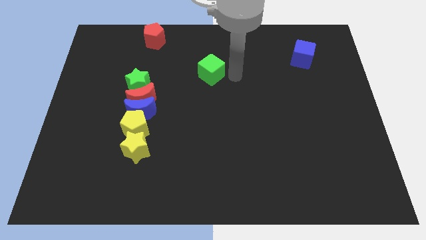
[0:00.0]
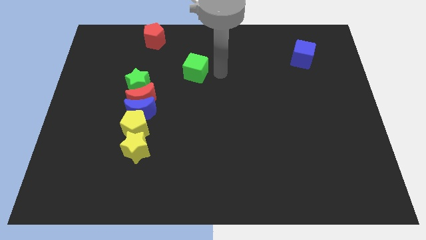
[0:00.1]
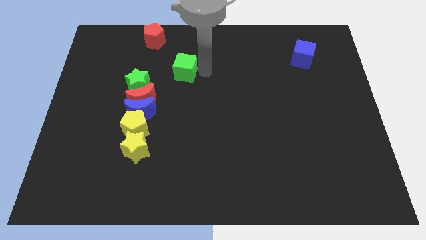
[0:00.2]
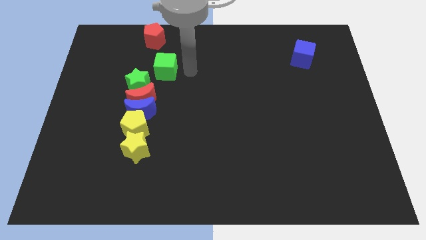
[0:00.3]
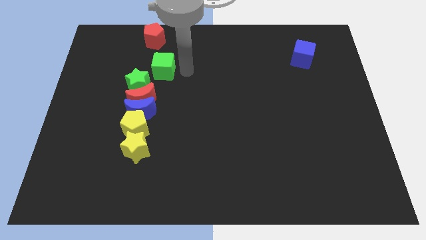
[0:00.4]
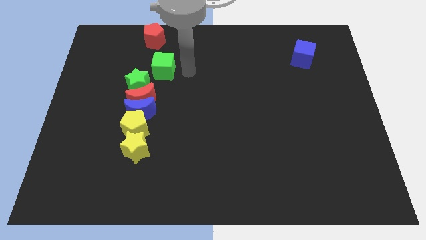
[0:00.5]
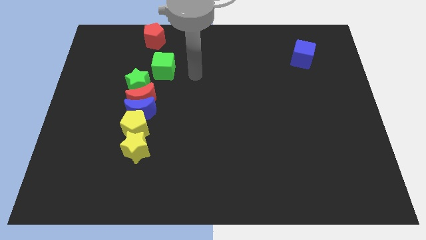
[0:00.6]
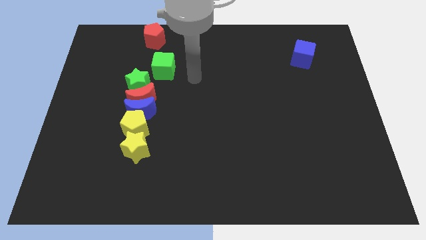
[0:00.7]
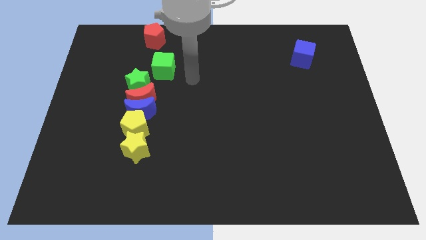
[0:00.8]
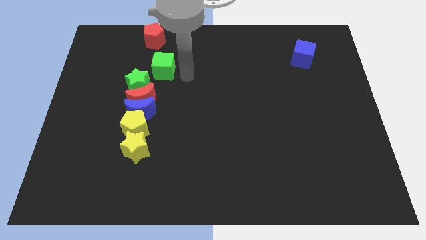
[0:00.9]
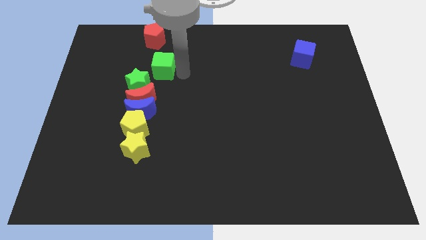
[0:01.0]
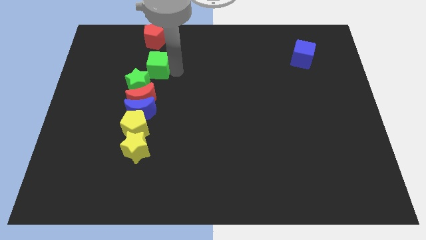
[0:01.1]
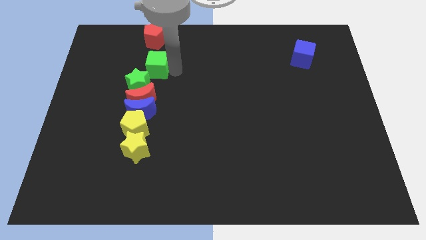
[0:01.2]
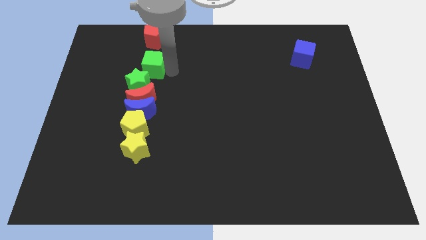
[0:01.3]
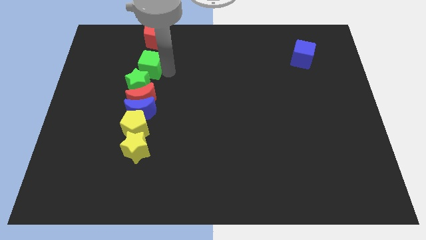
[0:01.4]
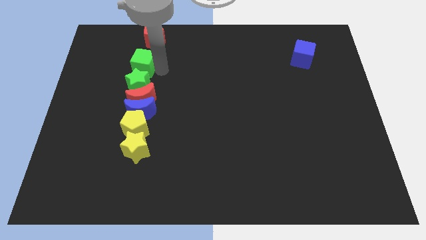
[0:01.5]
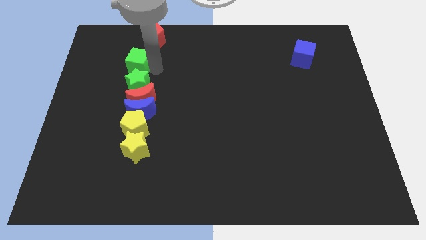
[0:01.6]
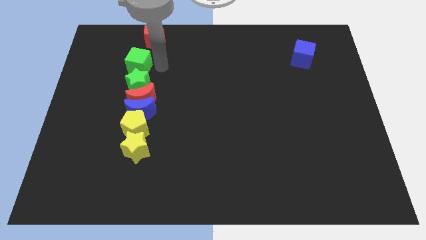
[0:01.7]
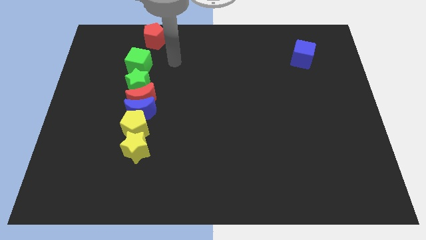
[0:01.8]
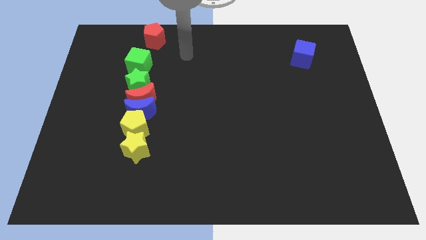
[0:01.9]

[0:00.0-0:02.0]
place the green cube above the green star

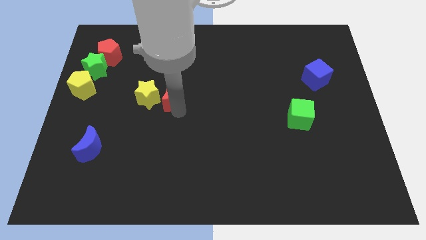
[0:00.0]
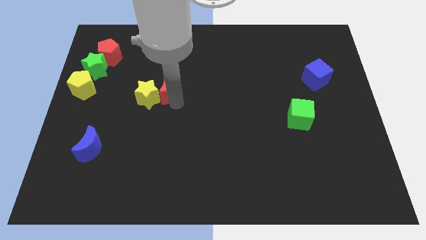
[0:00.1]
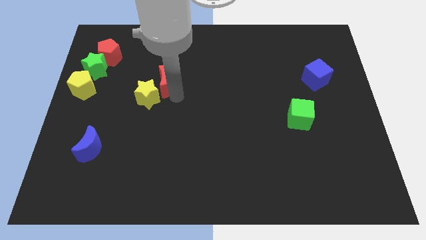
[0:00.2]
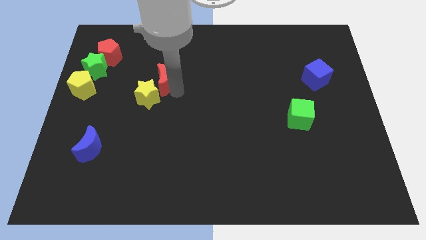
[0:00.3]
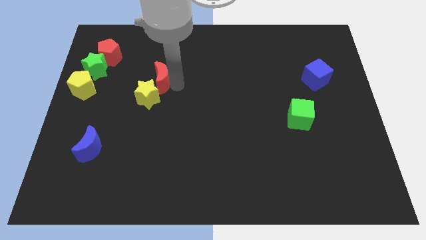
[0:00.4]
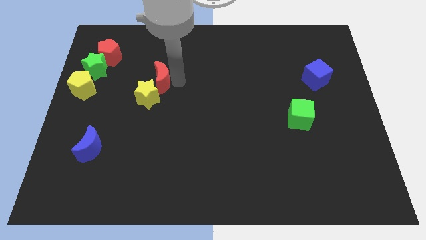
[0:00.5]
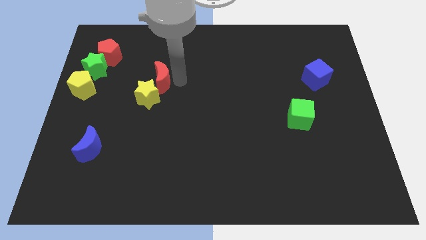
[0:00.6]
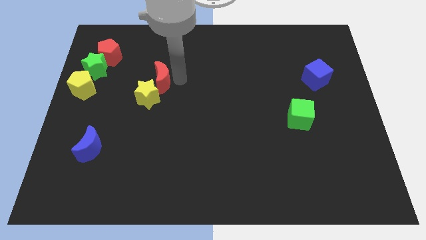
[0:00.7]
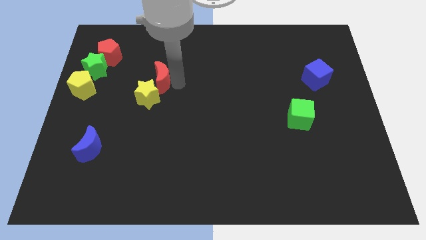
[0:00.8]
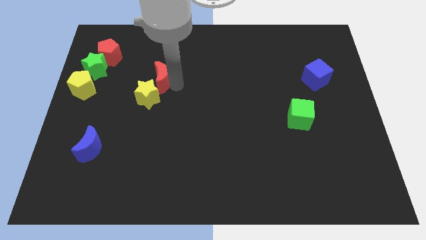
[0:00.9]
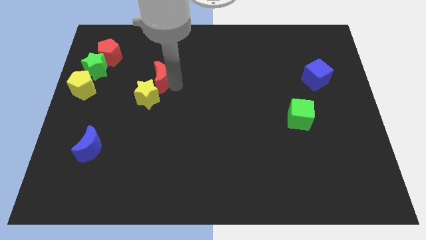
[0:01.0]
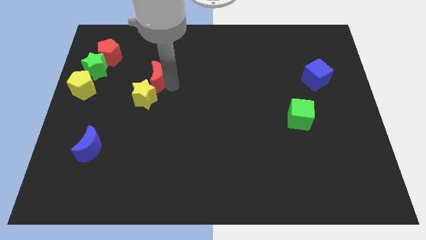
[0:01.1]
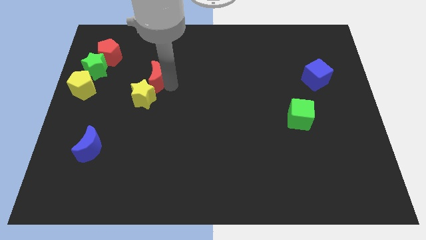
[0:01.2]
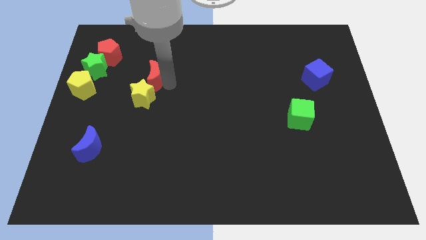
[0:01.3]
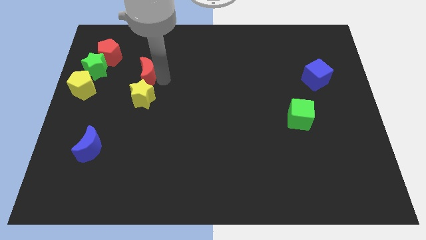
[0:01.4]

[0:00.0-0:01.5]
move the red moon to the top side of the yellow star

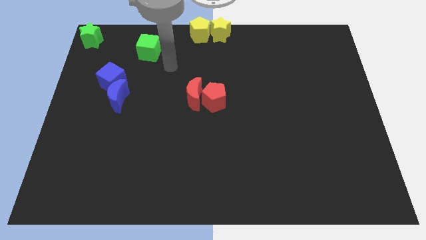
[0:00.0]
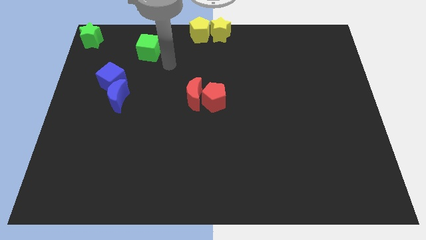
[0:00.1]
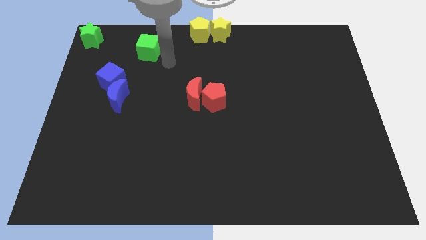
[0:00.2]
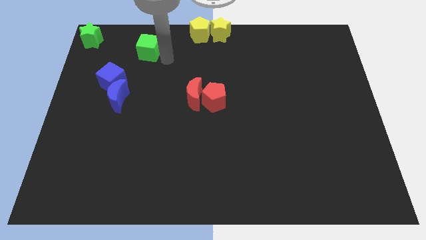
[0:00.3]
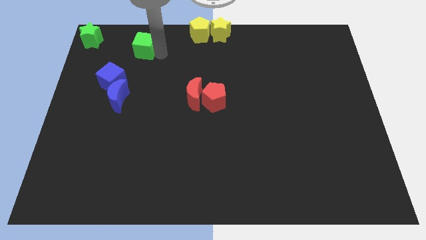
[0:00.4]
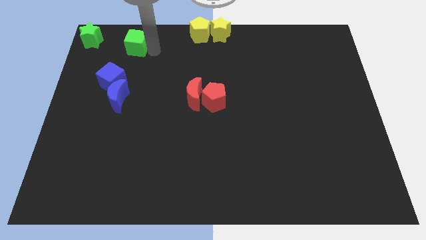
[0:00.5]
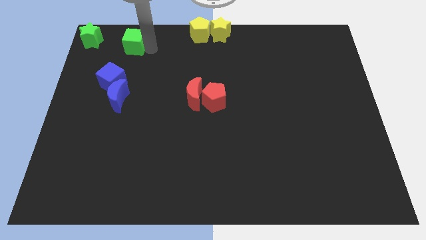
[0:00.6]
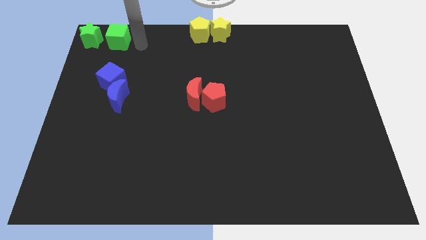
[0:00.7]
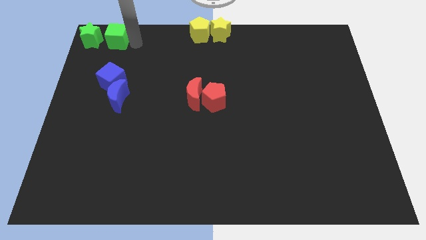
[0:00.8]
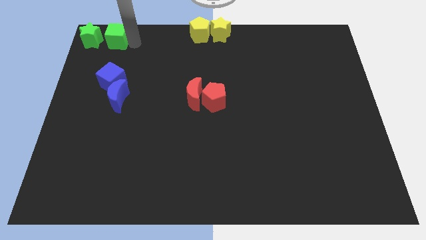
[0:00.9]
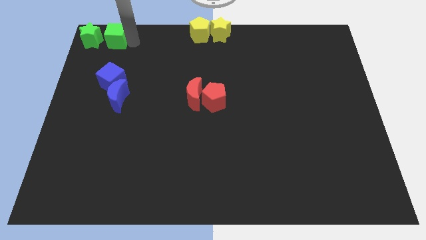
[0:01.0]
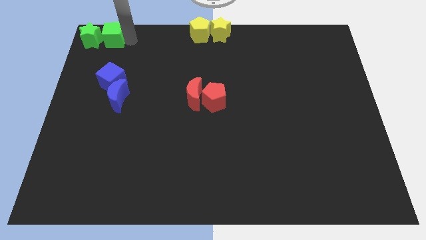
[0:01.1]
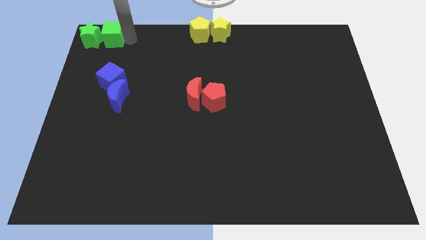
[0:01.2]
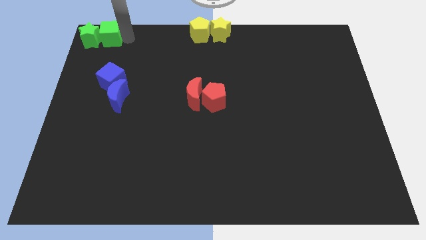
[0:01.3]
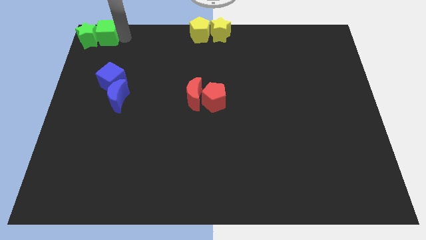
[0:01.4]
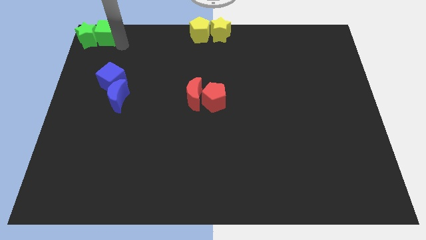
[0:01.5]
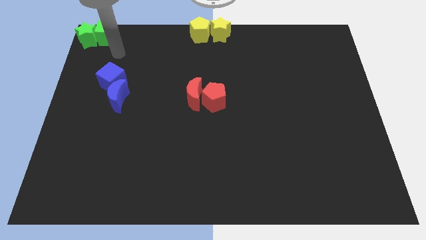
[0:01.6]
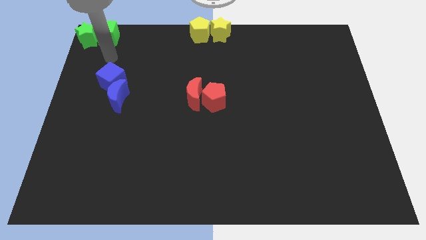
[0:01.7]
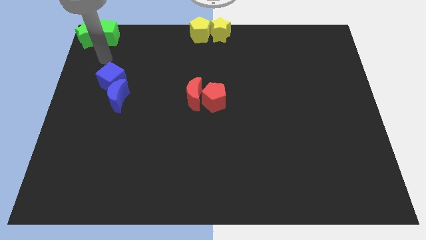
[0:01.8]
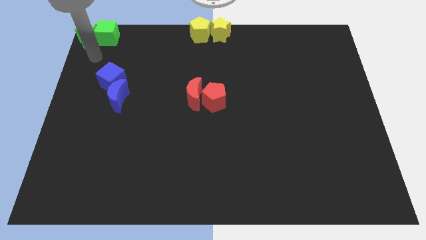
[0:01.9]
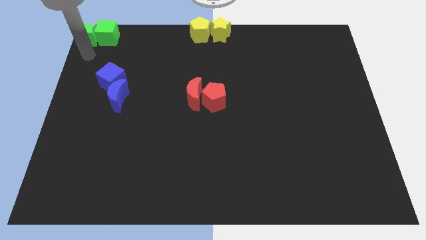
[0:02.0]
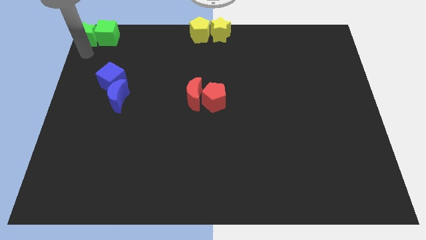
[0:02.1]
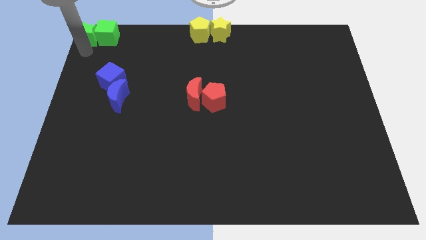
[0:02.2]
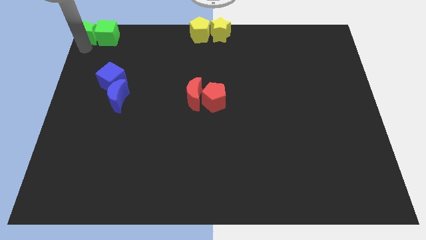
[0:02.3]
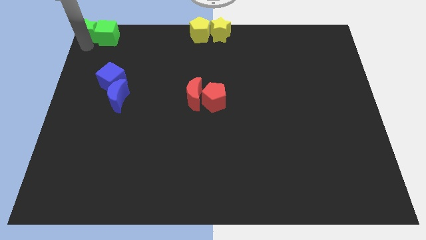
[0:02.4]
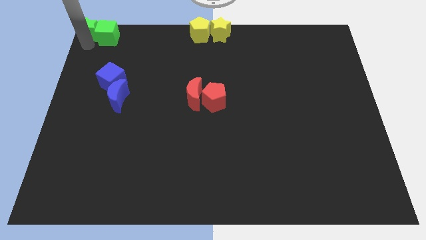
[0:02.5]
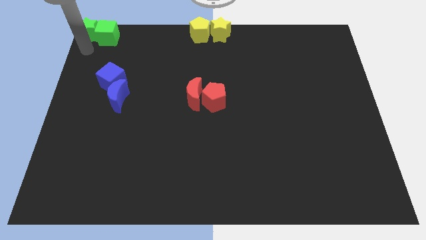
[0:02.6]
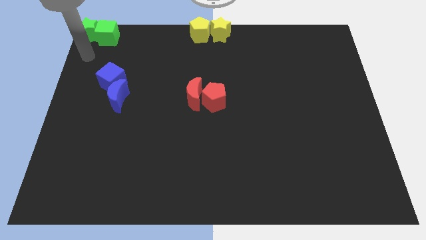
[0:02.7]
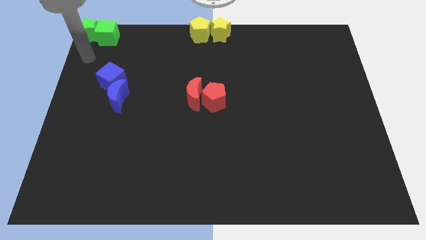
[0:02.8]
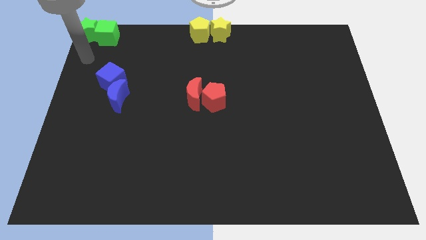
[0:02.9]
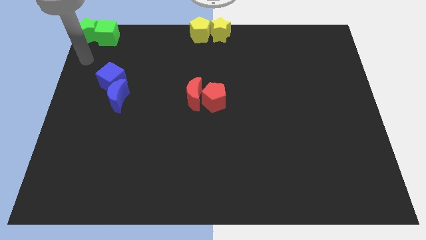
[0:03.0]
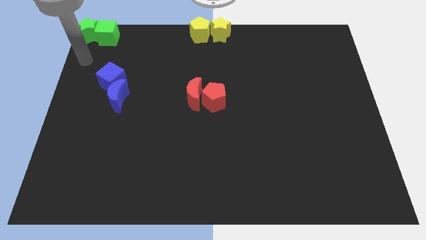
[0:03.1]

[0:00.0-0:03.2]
slide green cube into green star

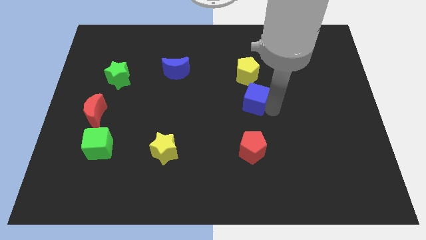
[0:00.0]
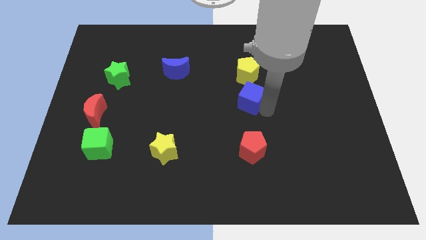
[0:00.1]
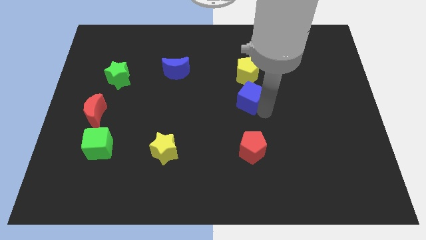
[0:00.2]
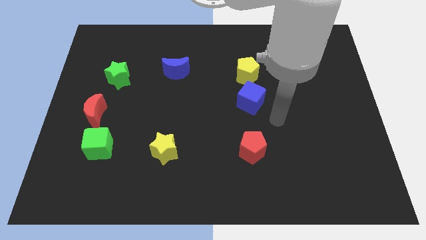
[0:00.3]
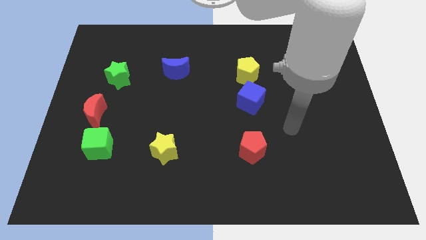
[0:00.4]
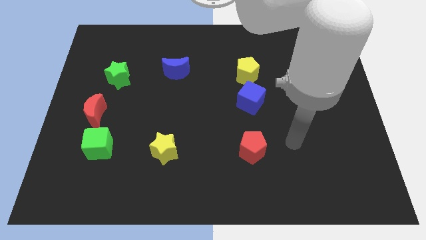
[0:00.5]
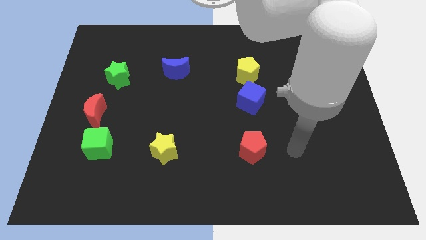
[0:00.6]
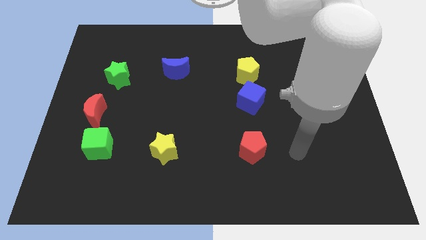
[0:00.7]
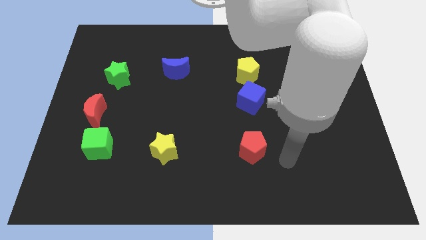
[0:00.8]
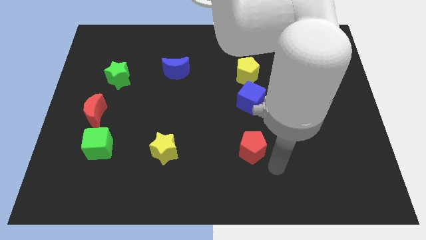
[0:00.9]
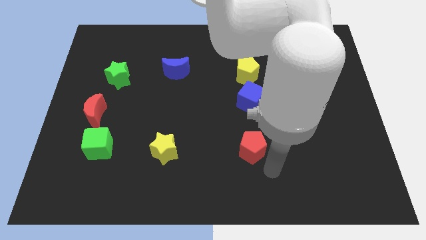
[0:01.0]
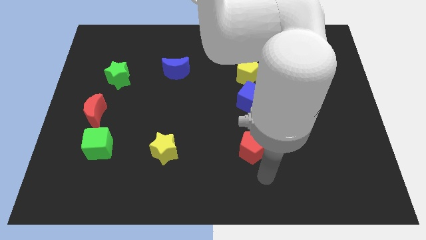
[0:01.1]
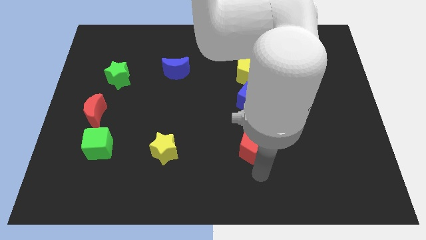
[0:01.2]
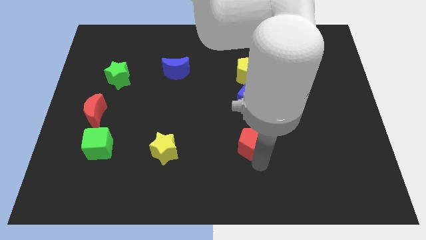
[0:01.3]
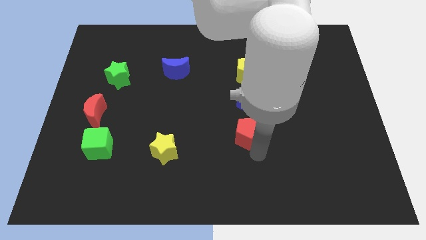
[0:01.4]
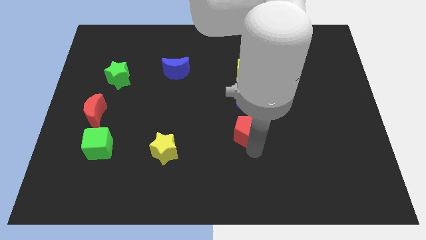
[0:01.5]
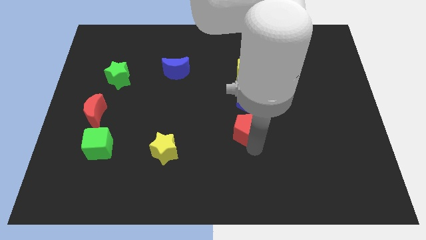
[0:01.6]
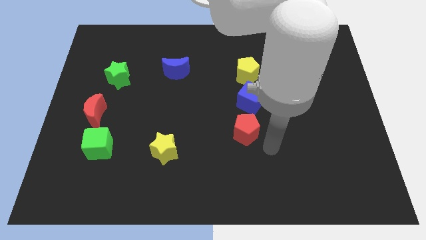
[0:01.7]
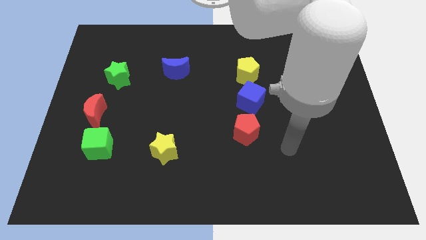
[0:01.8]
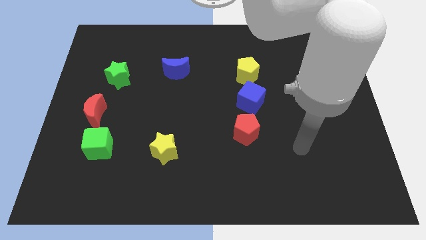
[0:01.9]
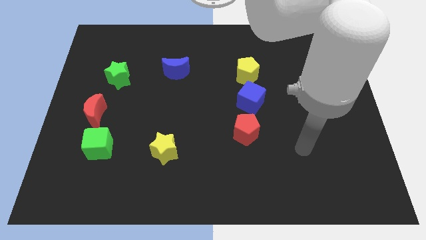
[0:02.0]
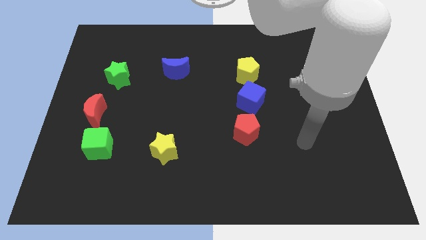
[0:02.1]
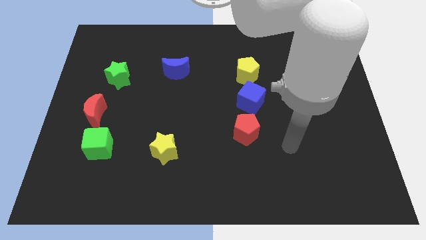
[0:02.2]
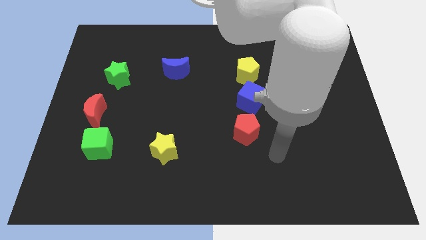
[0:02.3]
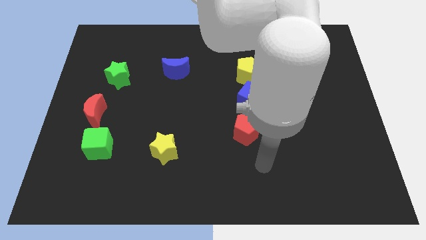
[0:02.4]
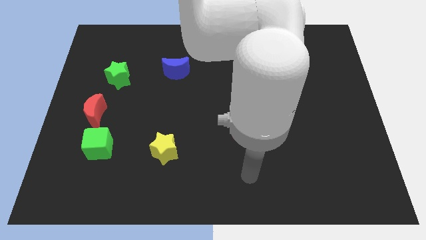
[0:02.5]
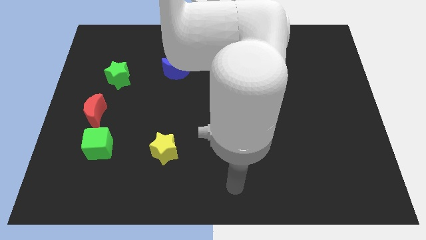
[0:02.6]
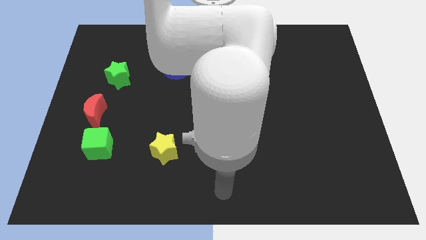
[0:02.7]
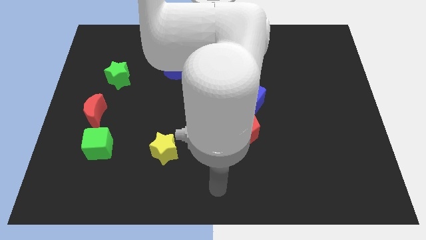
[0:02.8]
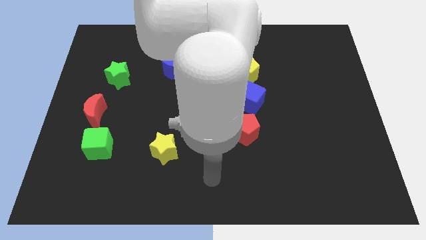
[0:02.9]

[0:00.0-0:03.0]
push the red pentagon close to the blue cube
